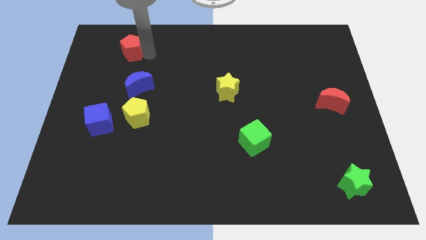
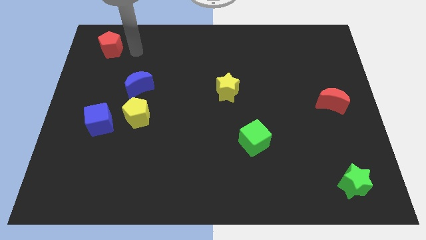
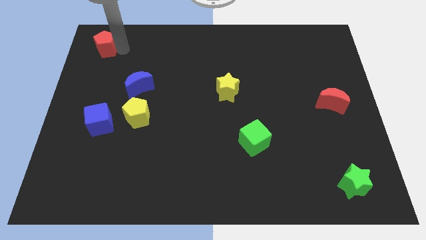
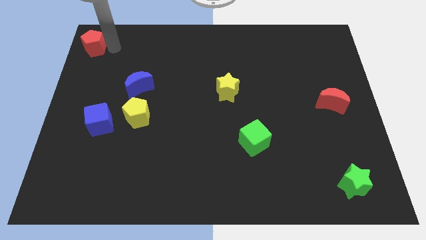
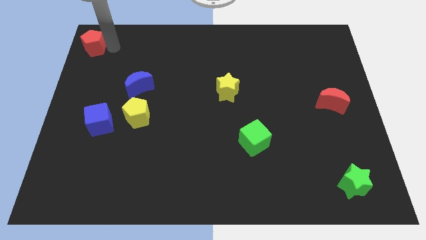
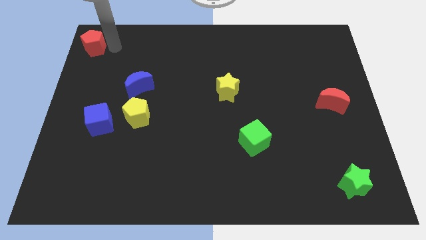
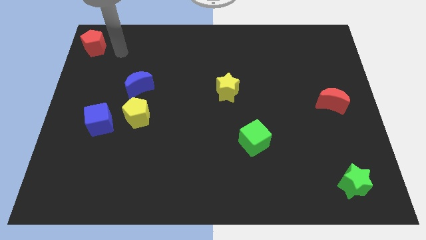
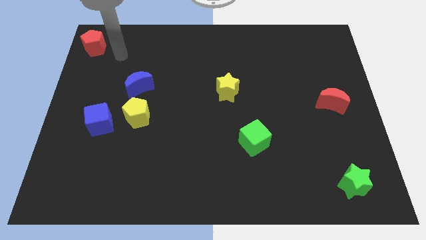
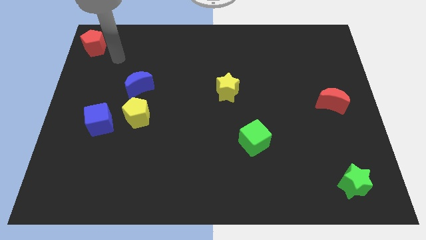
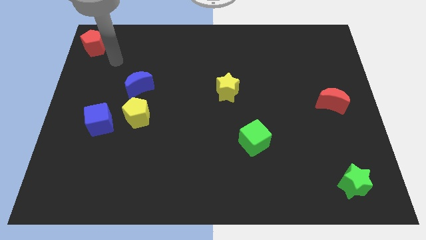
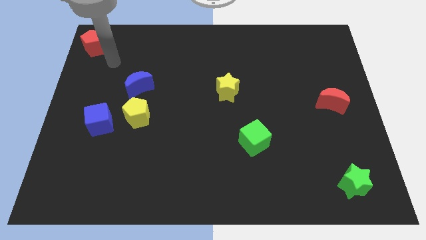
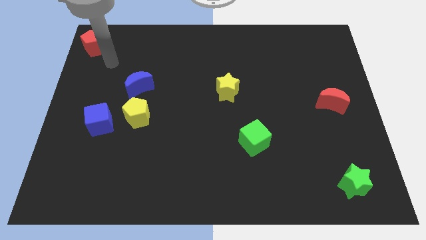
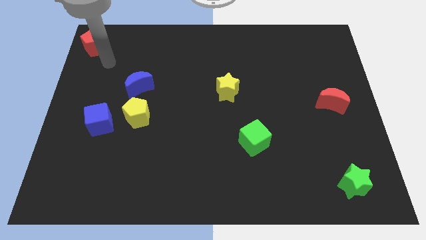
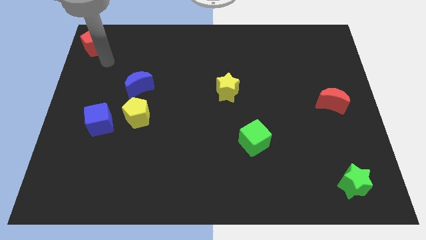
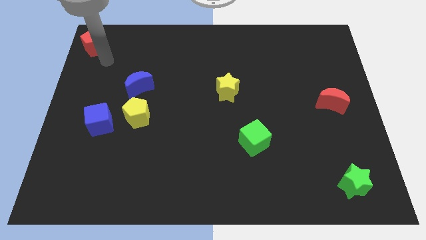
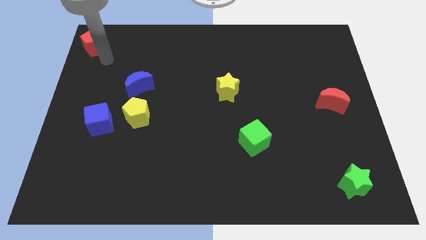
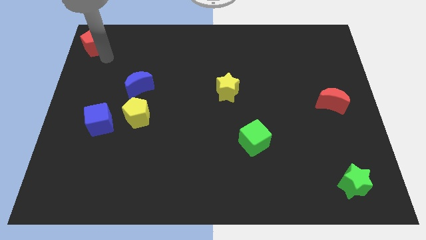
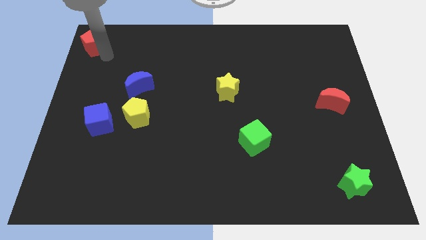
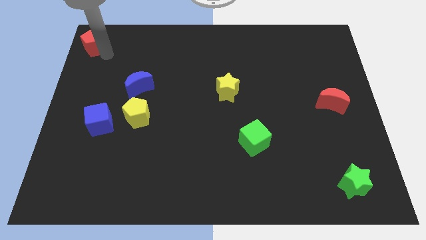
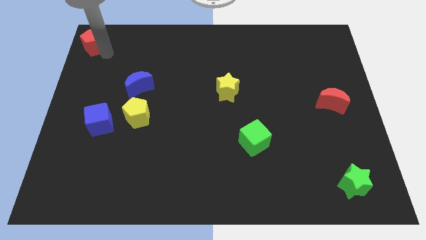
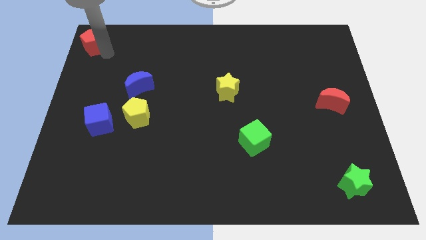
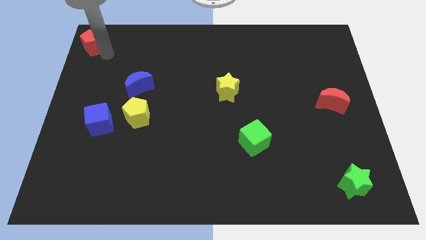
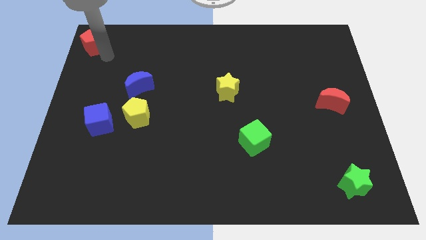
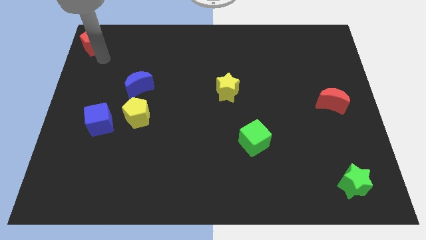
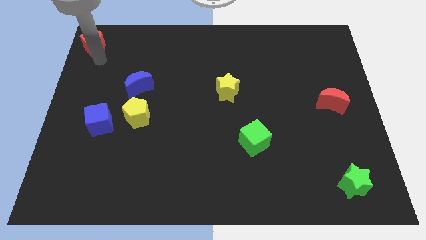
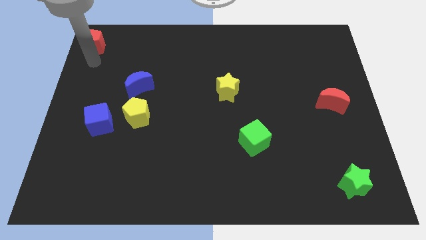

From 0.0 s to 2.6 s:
push the red pentagon to the top left

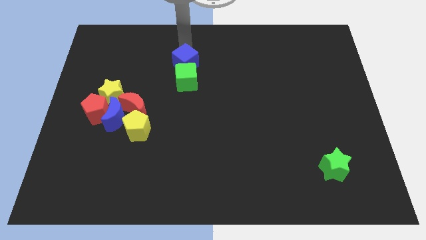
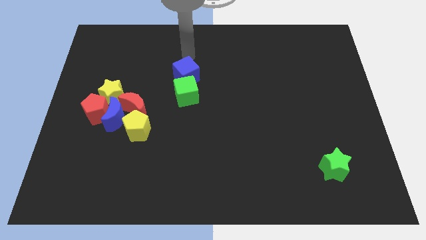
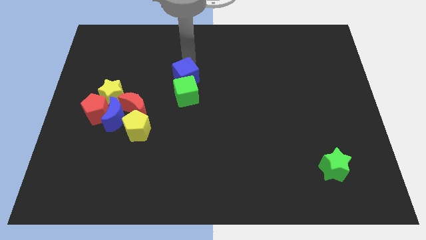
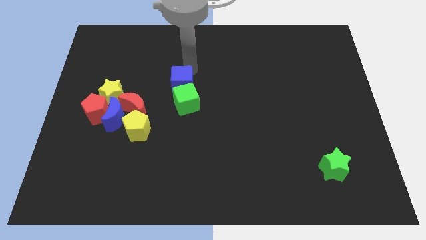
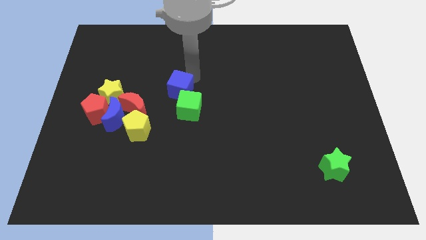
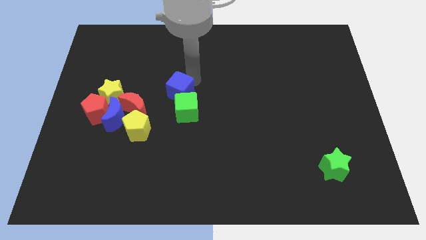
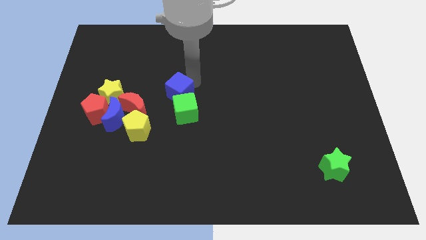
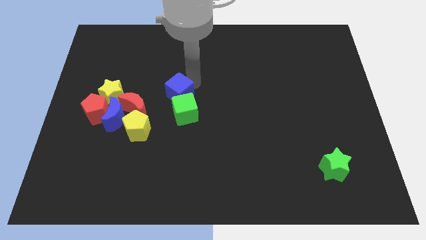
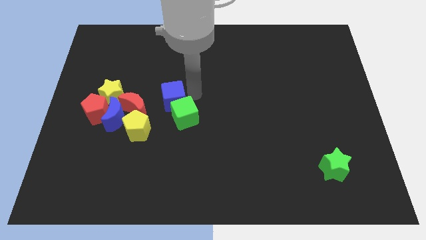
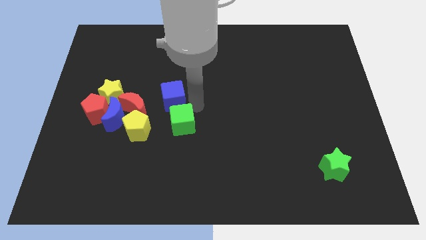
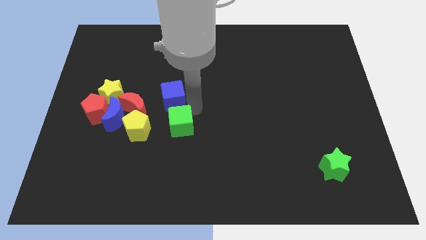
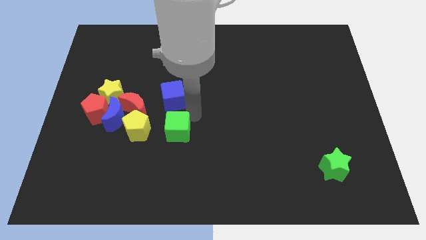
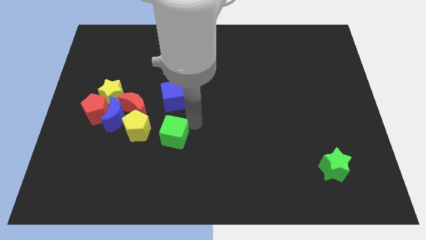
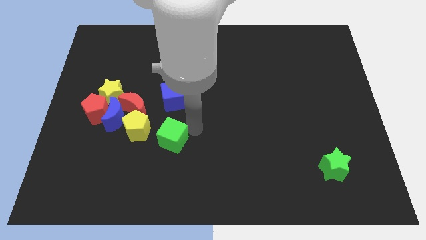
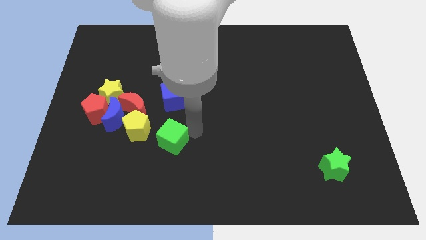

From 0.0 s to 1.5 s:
place the green cube to the right of the yellow pentagon

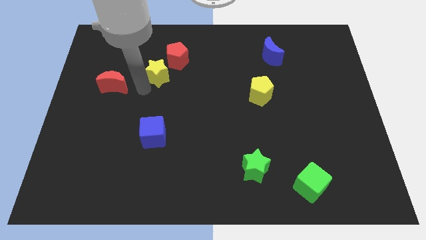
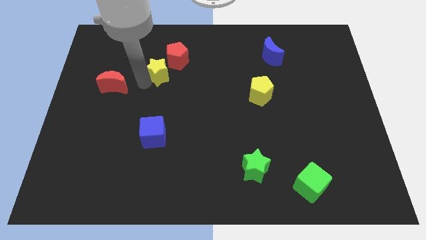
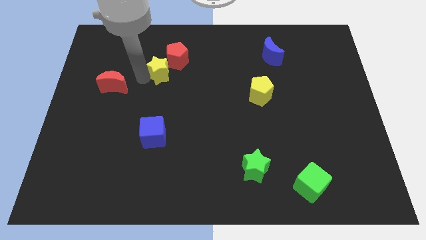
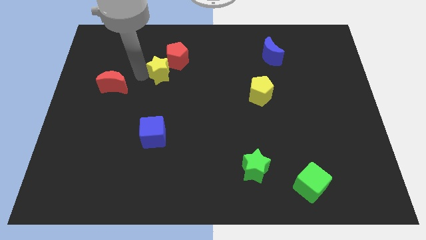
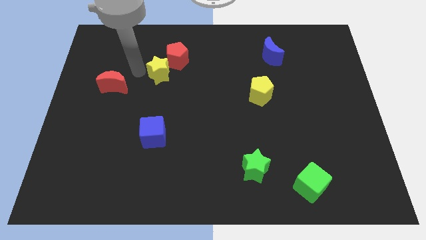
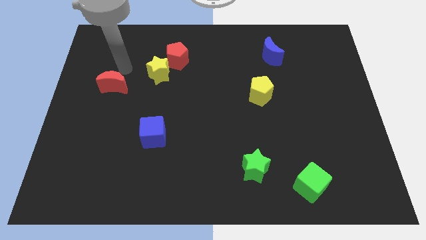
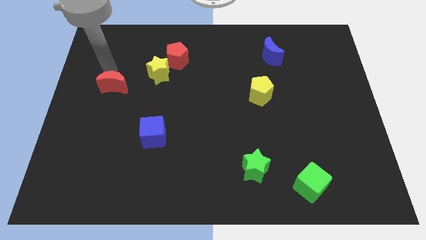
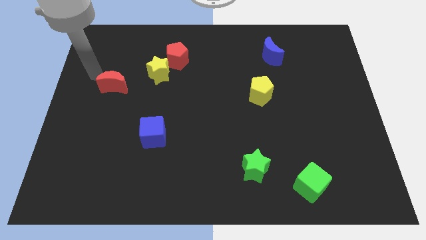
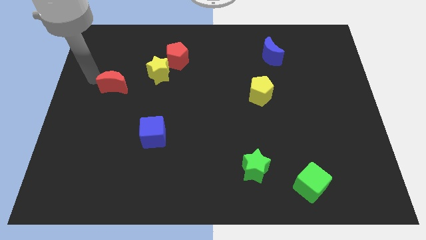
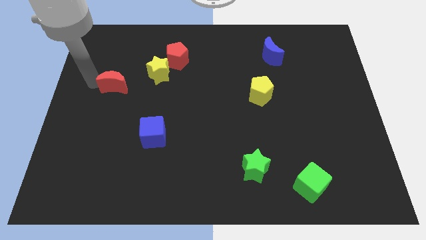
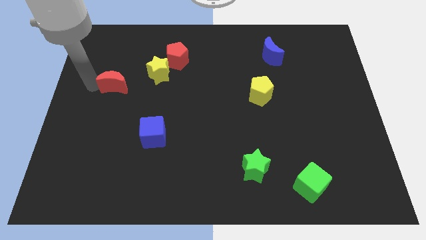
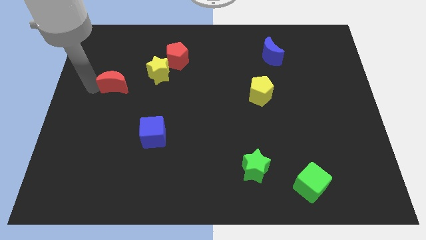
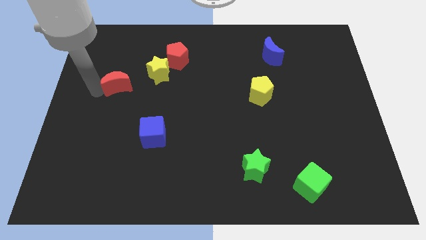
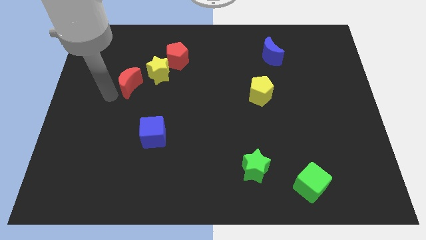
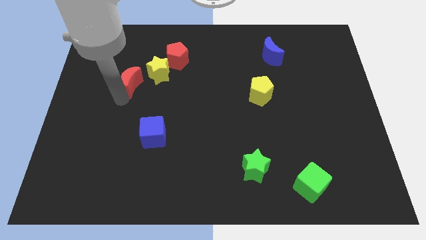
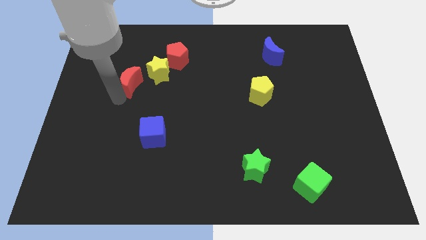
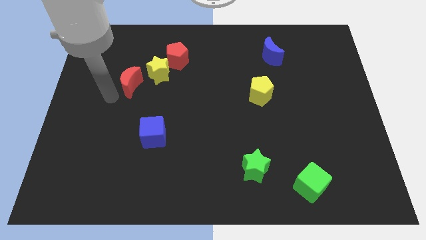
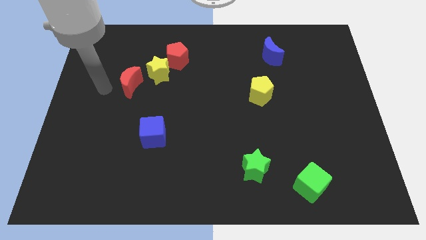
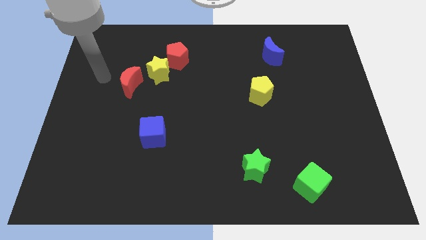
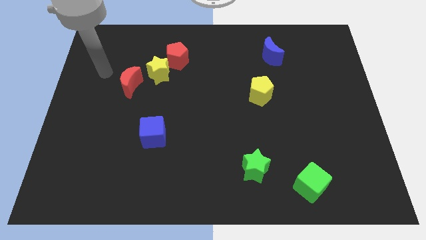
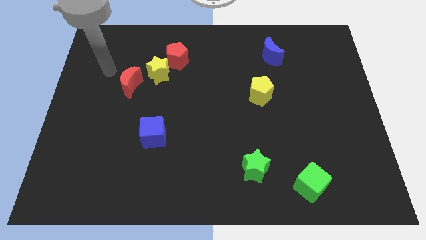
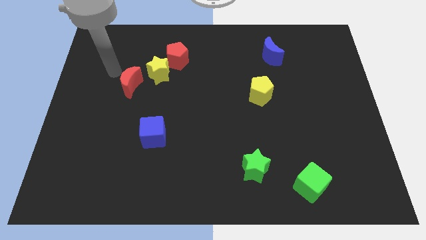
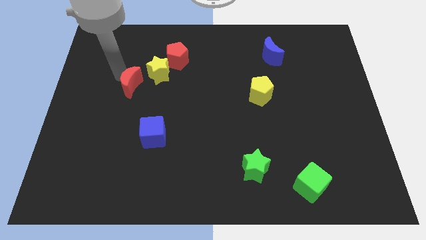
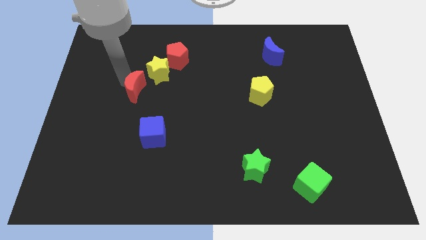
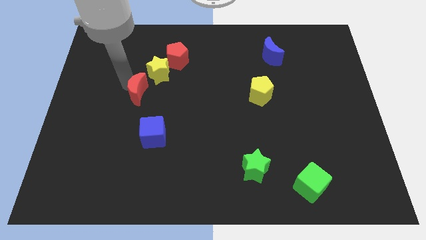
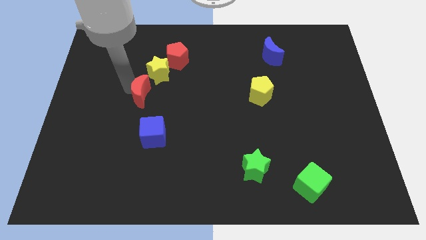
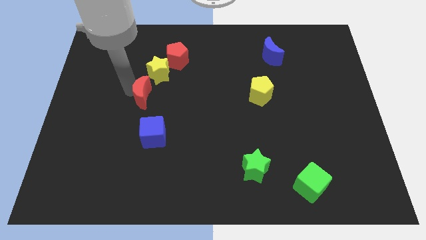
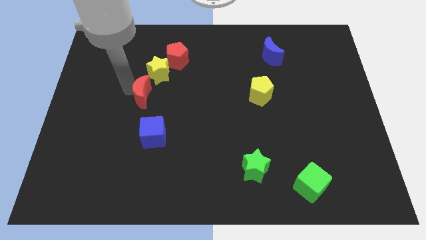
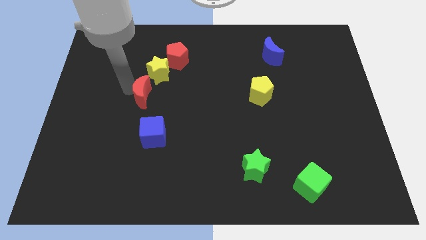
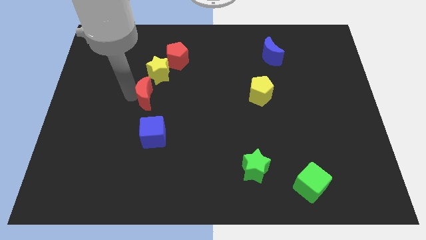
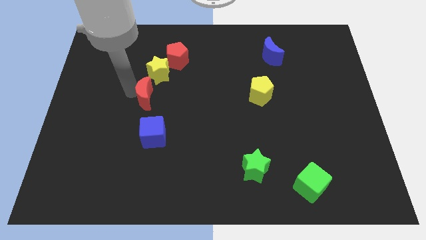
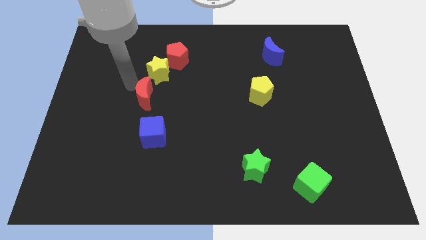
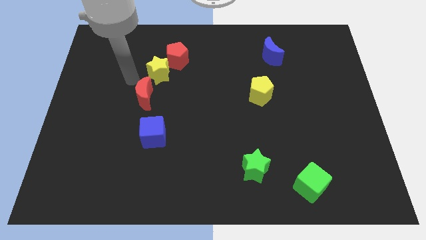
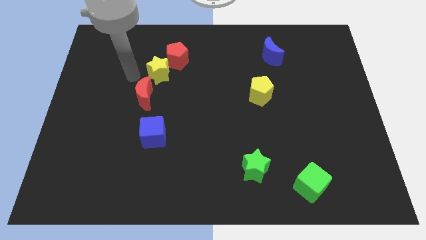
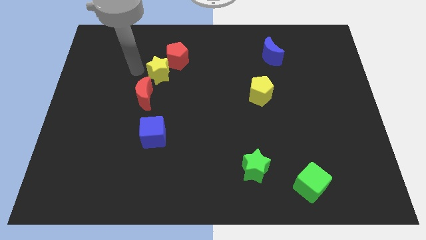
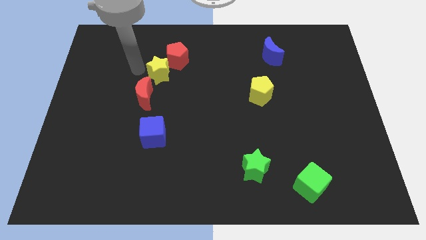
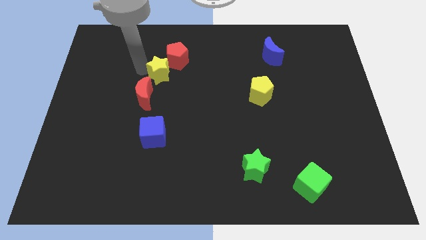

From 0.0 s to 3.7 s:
move the red moon diagonal top left to the blue cube

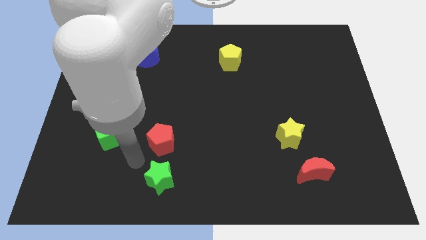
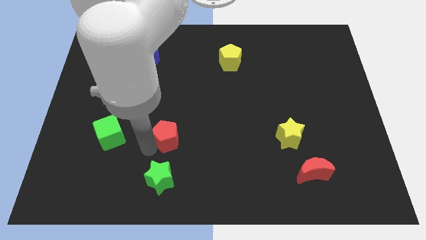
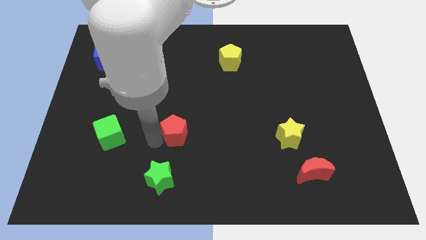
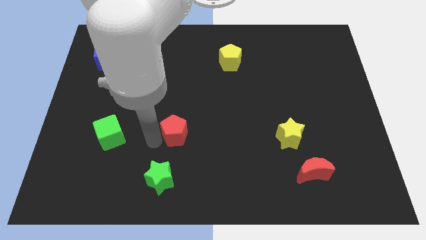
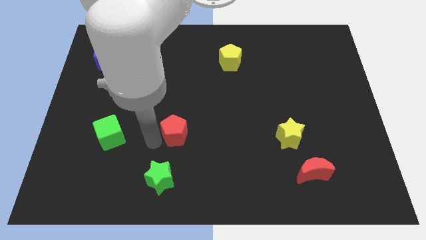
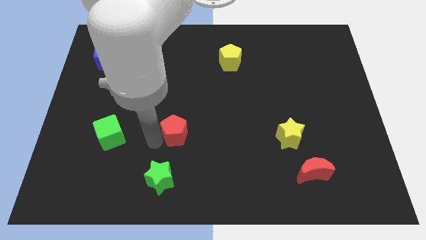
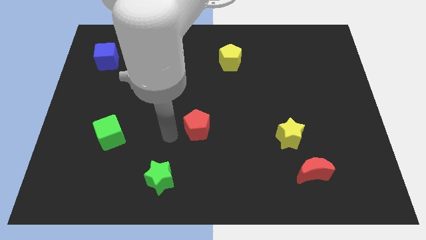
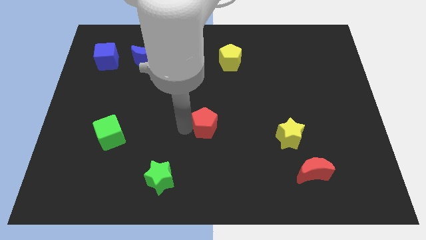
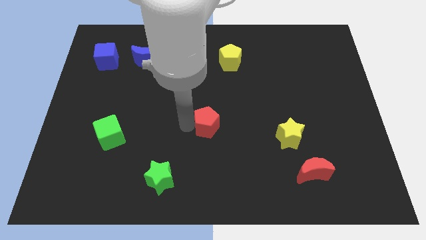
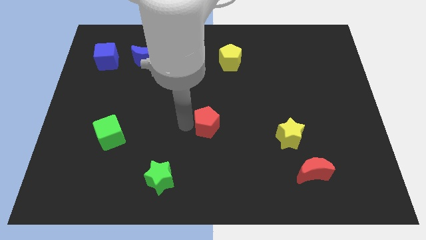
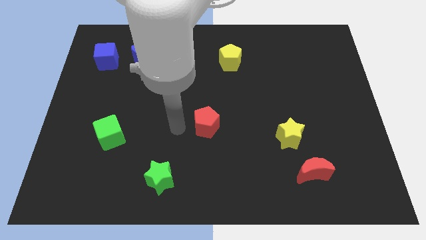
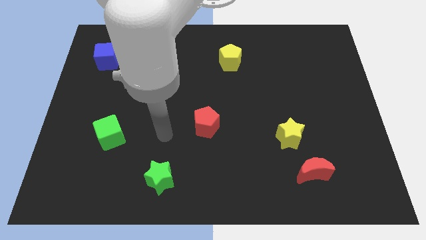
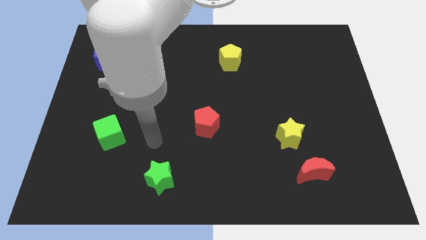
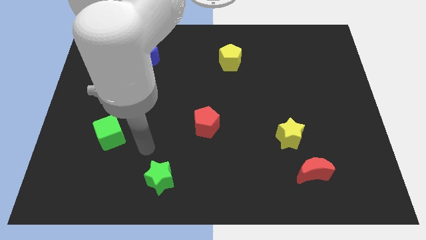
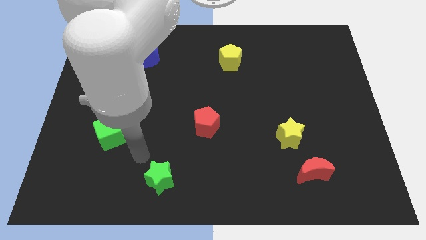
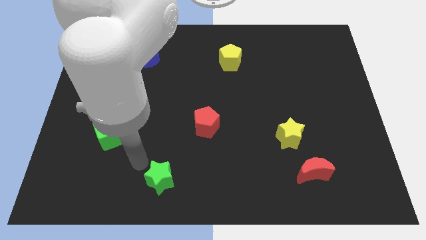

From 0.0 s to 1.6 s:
place the red pentagon to the center of the board
